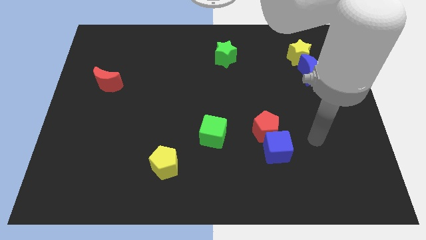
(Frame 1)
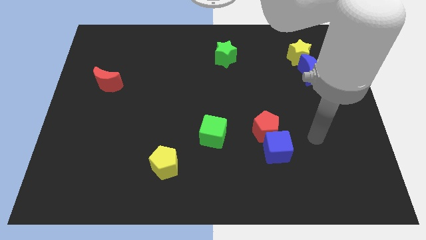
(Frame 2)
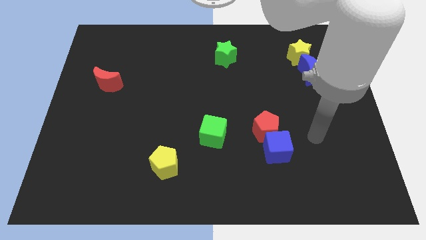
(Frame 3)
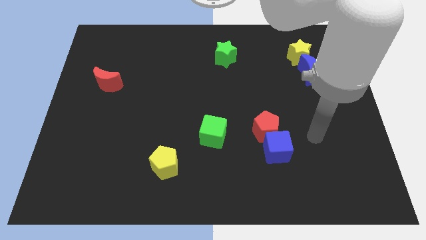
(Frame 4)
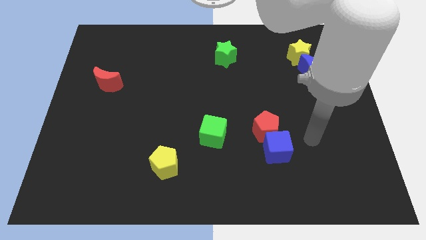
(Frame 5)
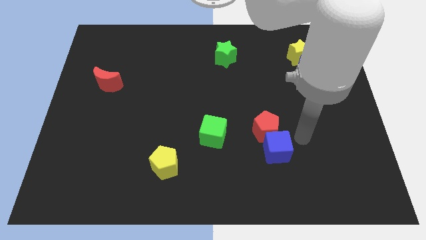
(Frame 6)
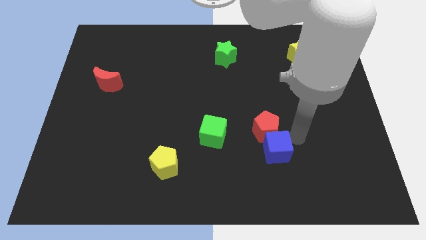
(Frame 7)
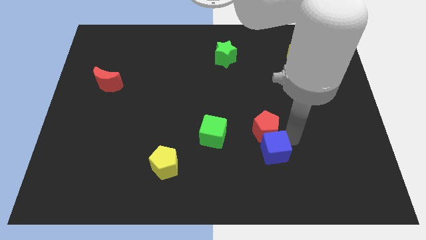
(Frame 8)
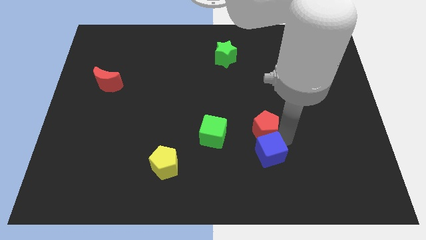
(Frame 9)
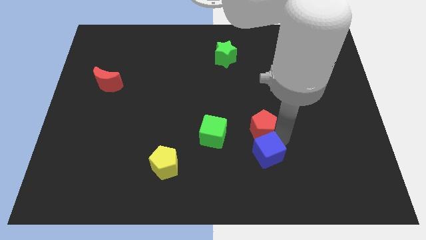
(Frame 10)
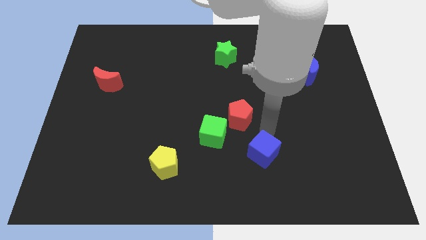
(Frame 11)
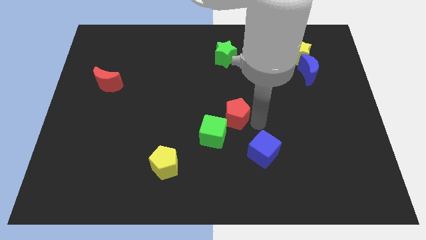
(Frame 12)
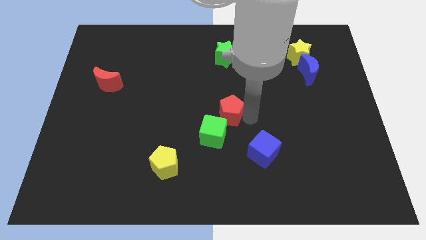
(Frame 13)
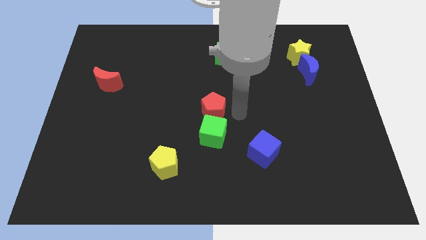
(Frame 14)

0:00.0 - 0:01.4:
push the red pentagon close to the green cube

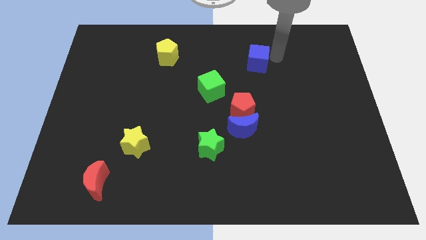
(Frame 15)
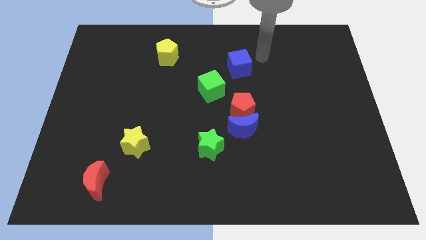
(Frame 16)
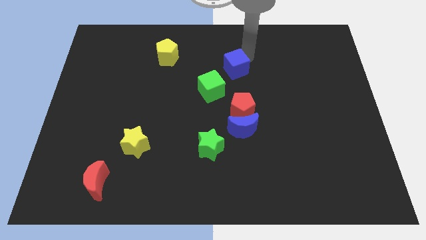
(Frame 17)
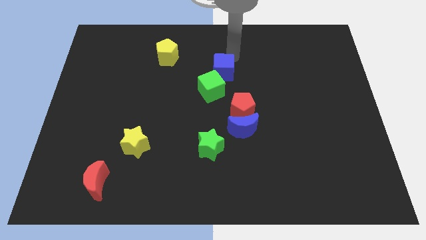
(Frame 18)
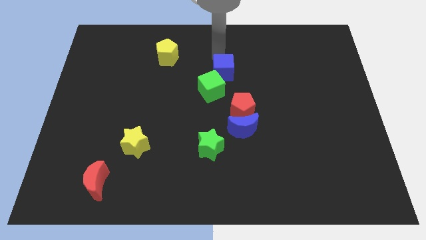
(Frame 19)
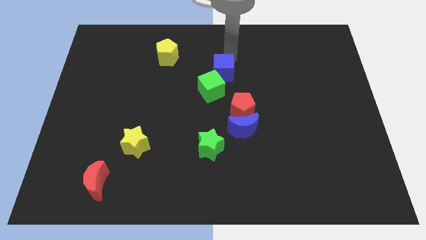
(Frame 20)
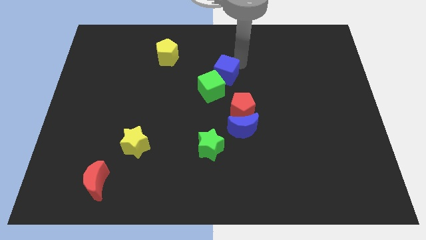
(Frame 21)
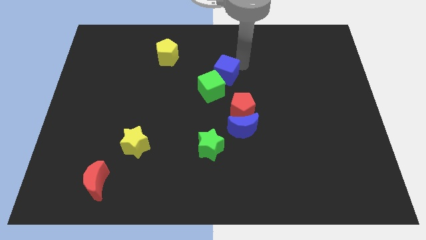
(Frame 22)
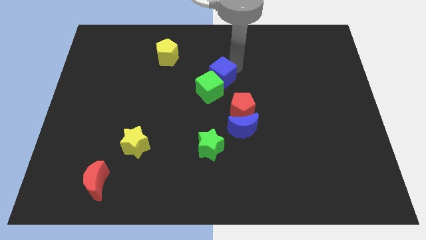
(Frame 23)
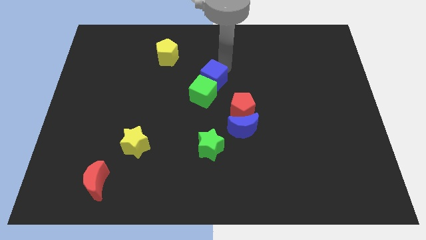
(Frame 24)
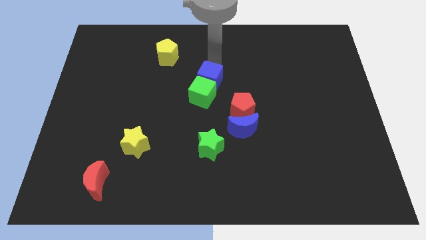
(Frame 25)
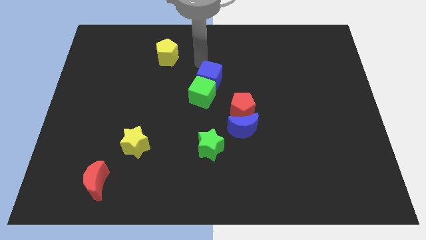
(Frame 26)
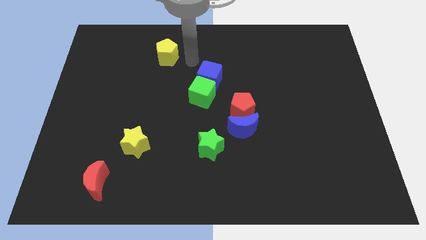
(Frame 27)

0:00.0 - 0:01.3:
place the blue cube above the green cube

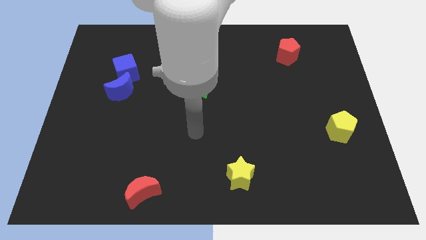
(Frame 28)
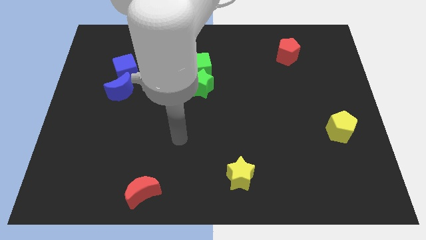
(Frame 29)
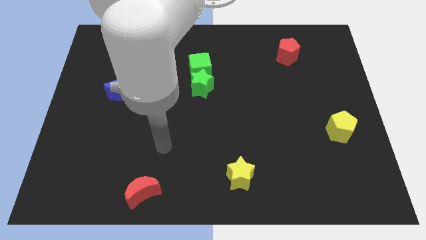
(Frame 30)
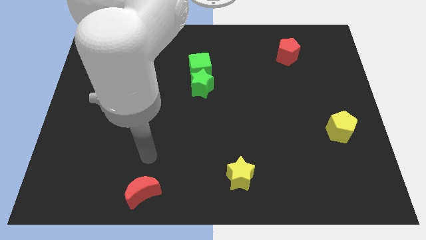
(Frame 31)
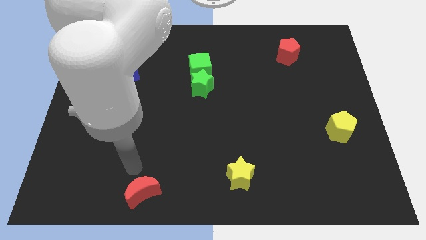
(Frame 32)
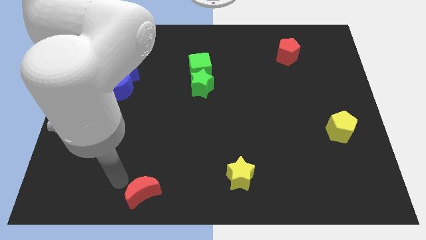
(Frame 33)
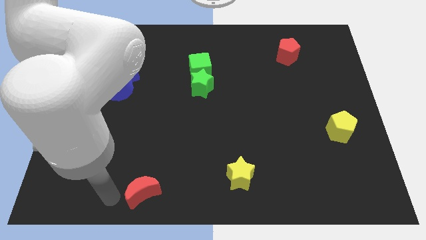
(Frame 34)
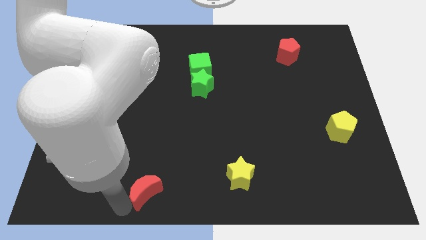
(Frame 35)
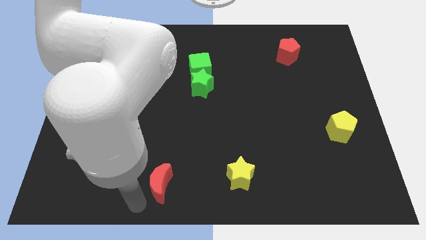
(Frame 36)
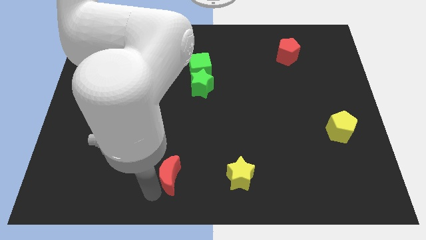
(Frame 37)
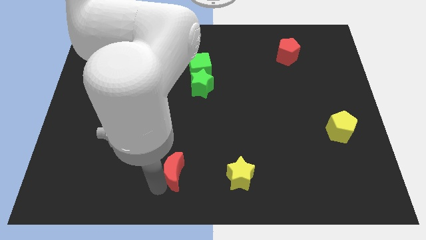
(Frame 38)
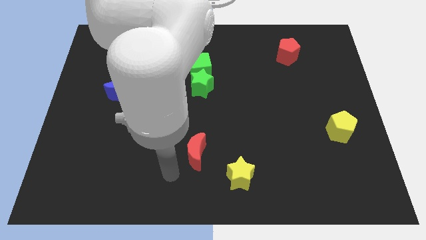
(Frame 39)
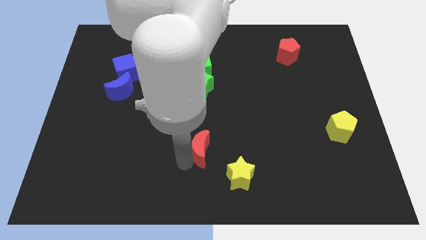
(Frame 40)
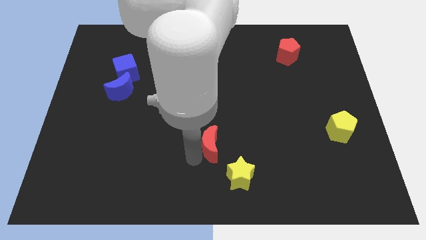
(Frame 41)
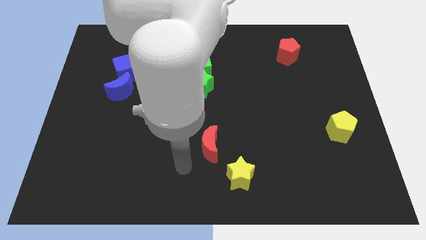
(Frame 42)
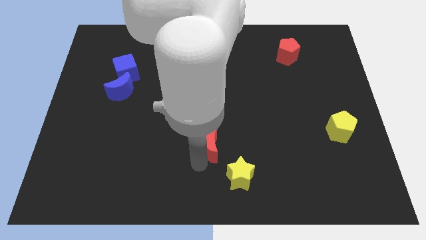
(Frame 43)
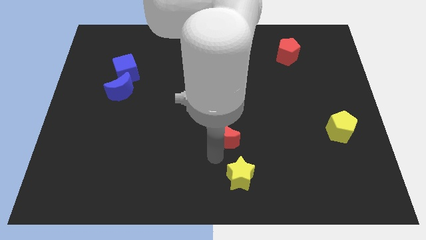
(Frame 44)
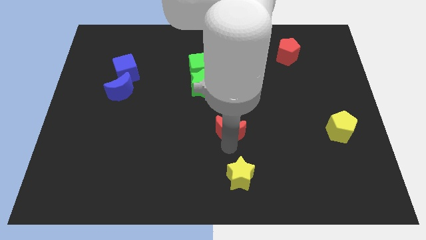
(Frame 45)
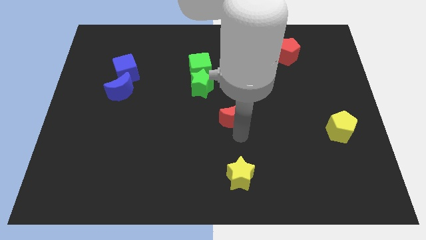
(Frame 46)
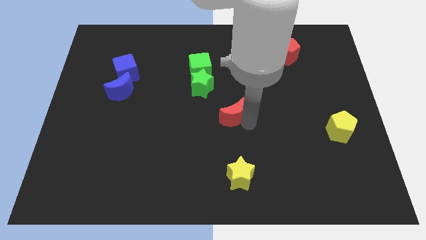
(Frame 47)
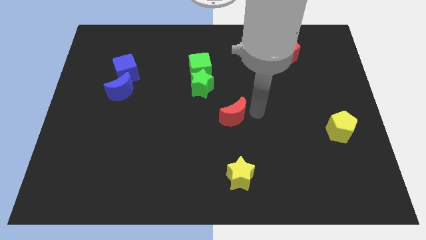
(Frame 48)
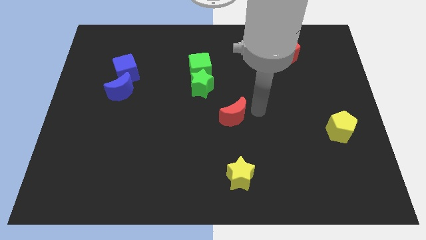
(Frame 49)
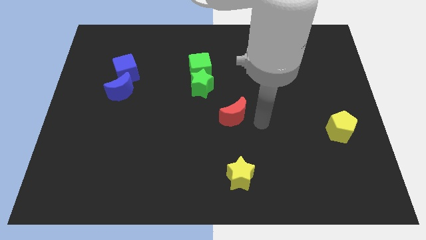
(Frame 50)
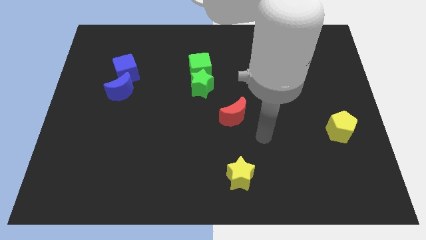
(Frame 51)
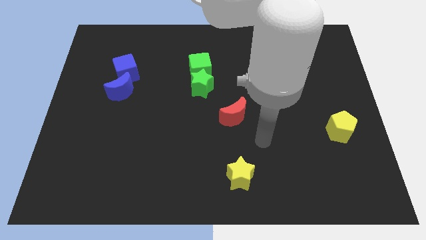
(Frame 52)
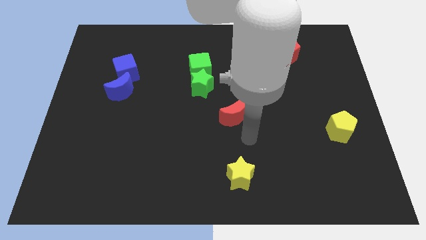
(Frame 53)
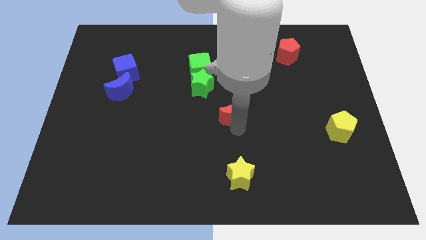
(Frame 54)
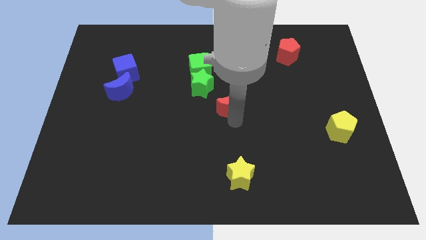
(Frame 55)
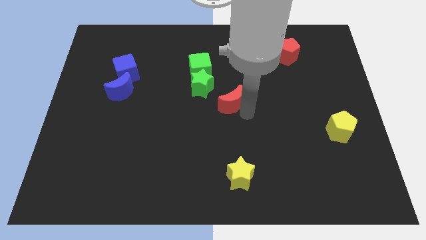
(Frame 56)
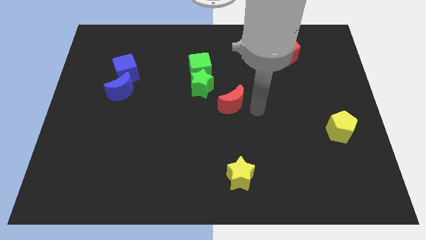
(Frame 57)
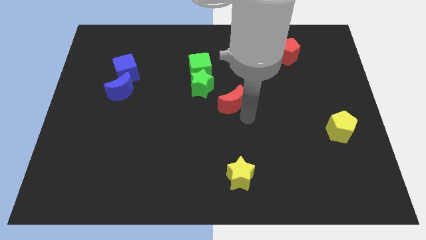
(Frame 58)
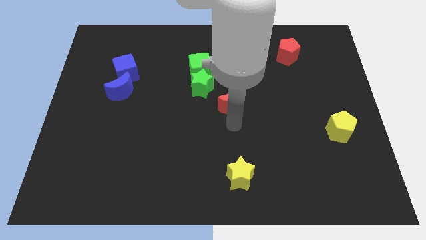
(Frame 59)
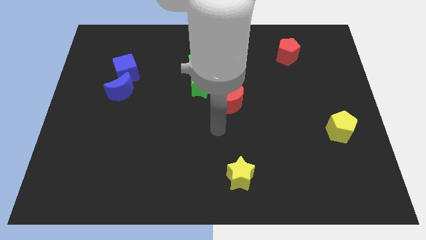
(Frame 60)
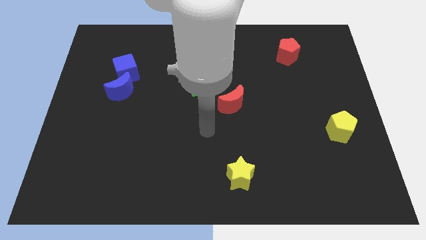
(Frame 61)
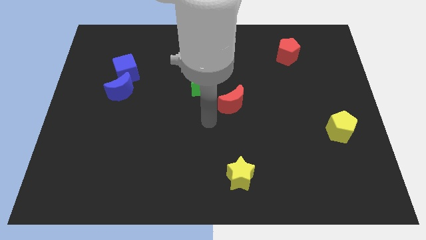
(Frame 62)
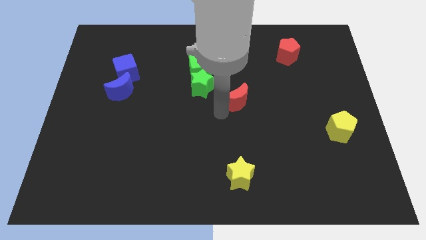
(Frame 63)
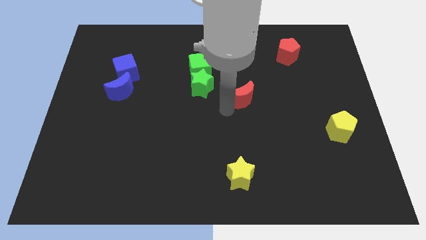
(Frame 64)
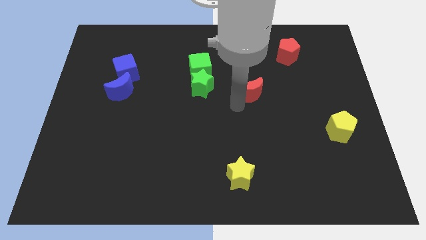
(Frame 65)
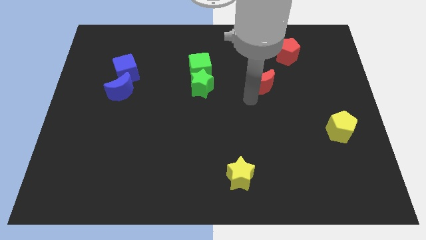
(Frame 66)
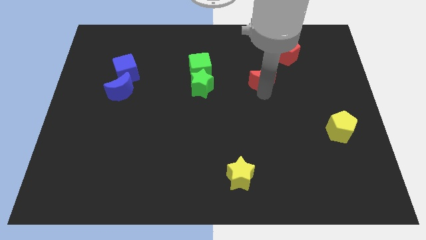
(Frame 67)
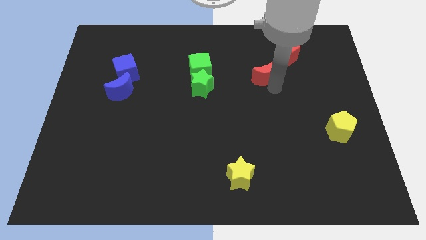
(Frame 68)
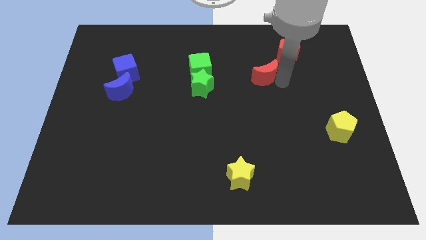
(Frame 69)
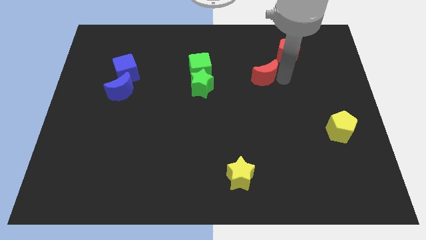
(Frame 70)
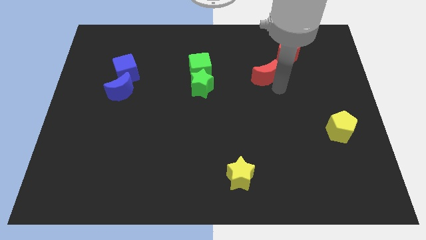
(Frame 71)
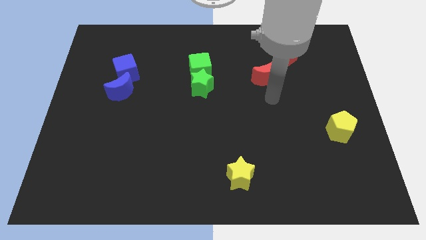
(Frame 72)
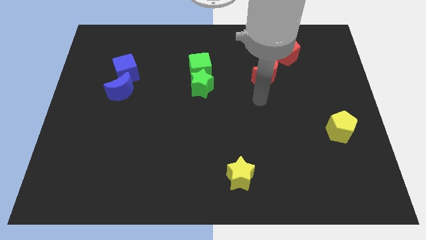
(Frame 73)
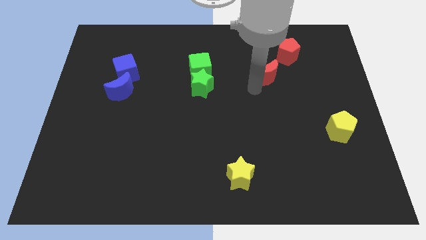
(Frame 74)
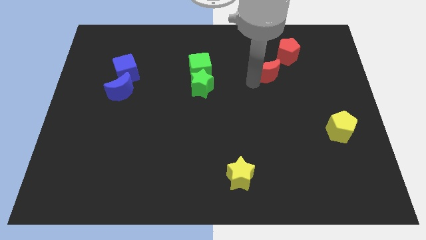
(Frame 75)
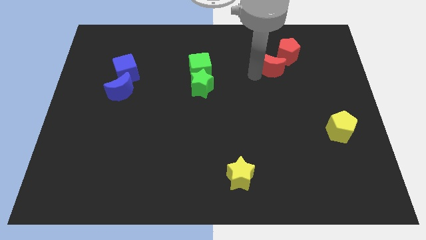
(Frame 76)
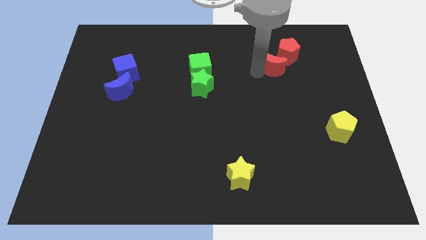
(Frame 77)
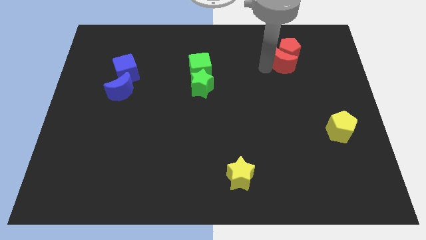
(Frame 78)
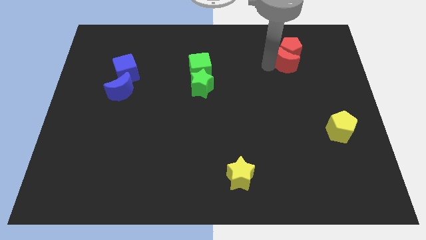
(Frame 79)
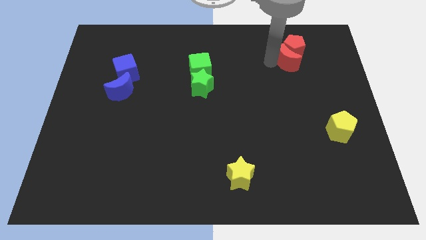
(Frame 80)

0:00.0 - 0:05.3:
move the red crescent into the red pentagon

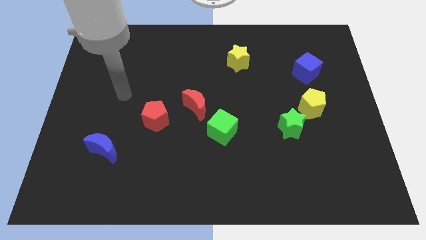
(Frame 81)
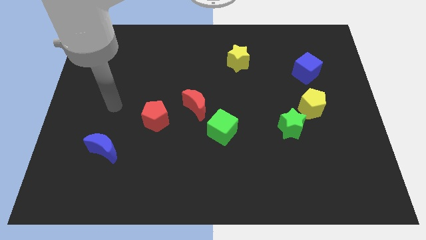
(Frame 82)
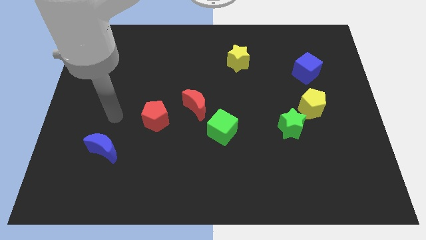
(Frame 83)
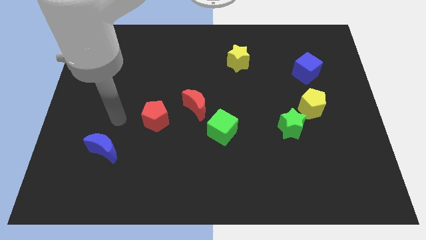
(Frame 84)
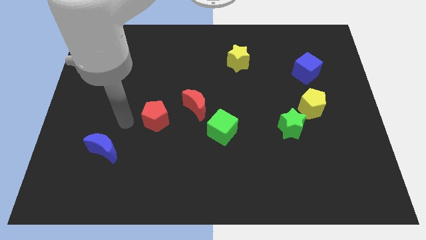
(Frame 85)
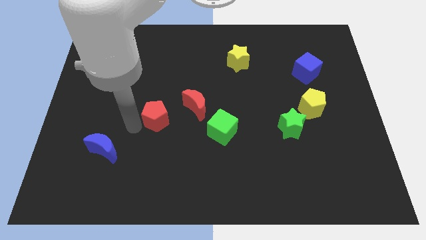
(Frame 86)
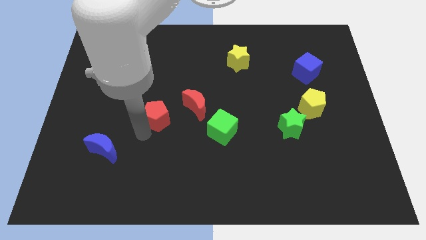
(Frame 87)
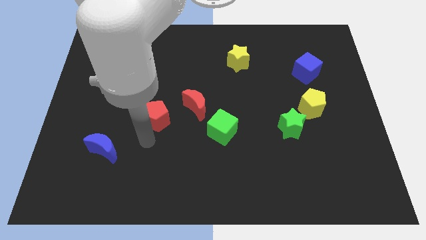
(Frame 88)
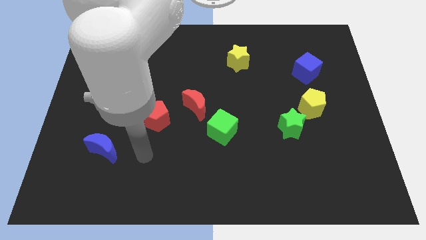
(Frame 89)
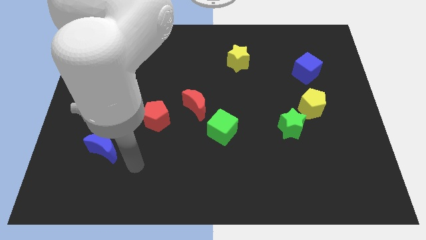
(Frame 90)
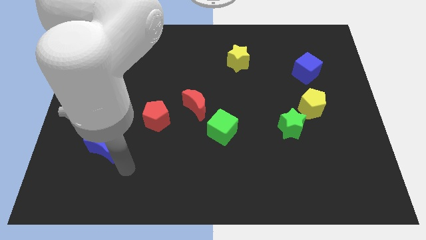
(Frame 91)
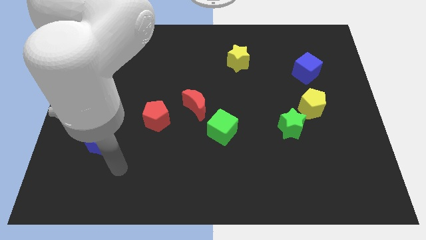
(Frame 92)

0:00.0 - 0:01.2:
touch the red pentagon
